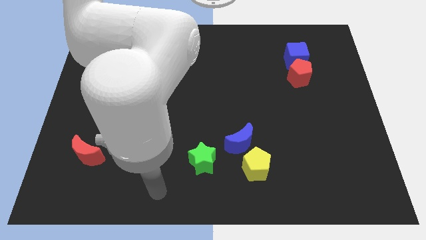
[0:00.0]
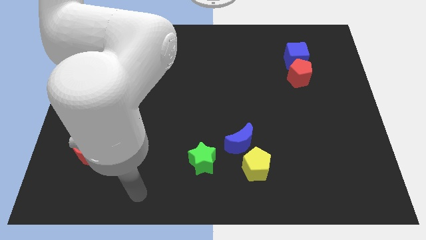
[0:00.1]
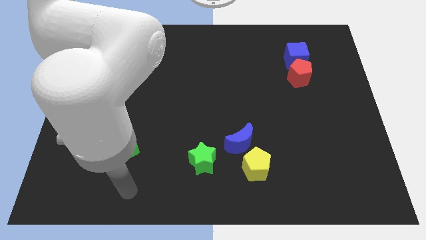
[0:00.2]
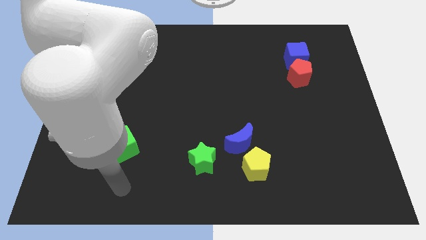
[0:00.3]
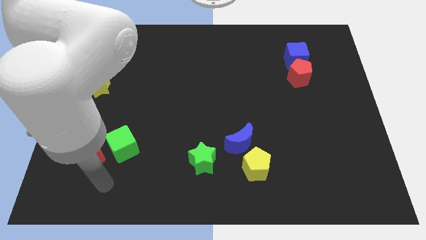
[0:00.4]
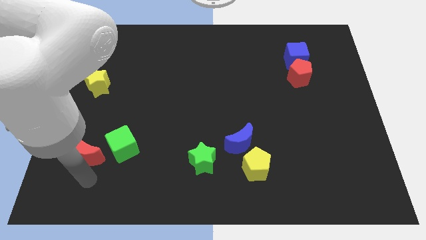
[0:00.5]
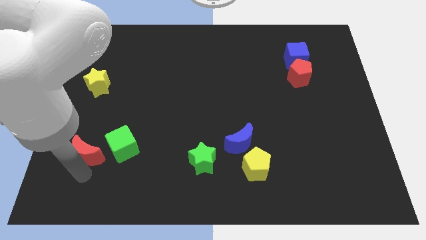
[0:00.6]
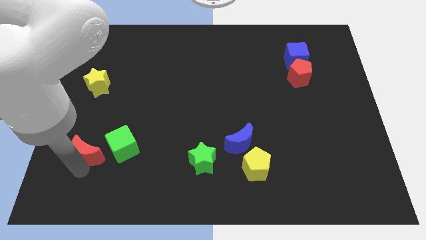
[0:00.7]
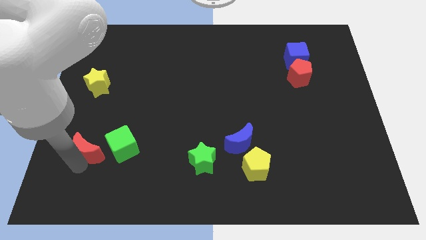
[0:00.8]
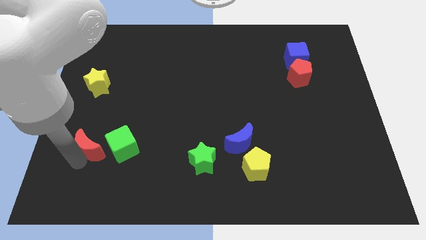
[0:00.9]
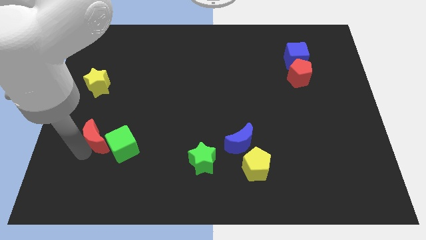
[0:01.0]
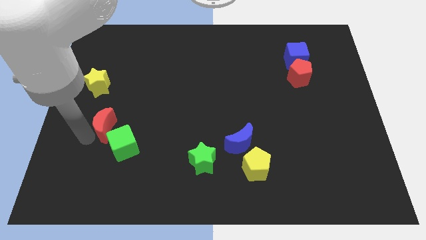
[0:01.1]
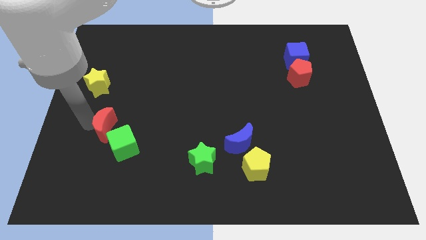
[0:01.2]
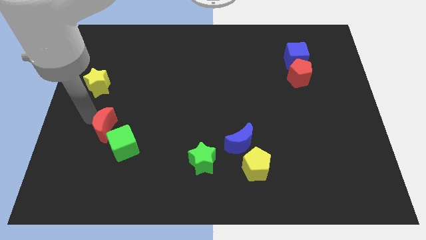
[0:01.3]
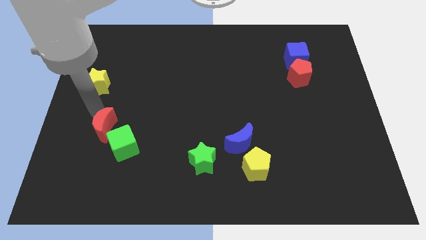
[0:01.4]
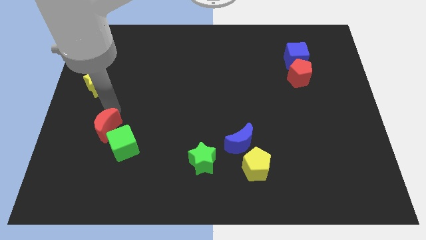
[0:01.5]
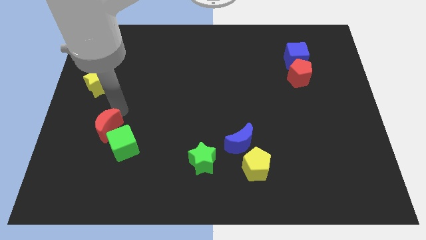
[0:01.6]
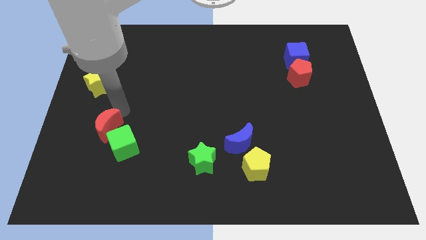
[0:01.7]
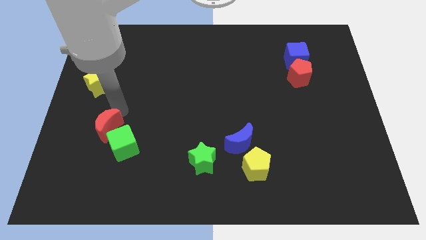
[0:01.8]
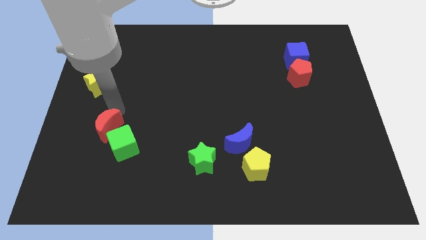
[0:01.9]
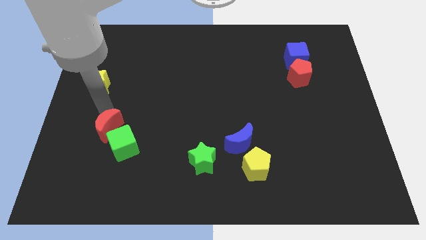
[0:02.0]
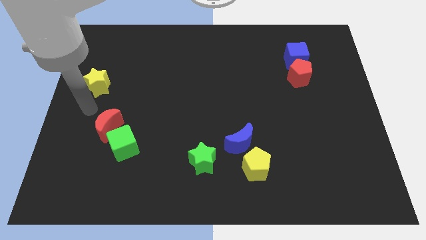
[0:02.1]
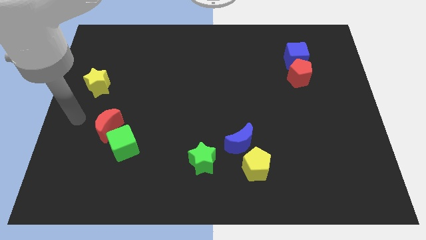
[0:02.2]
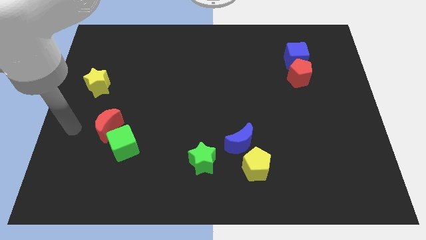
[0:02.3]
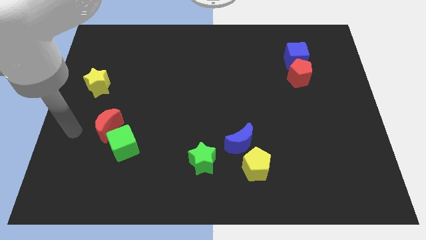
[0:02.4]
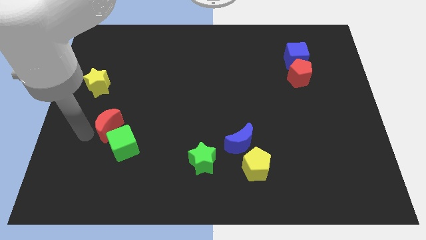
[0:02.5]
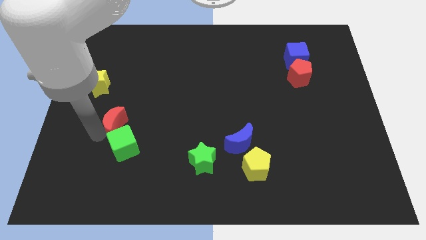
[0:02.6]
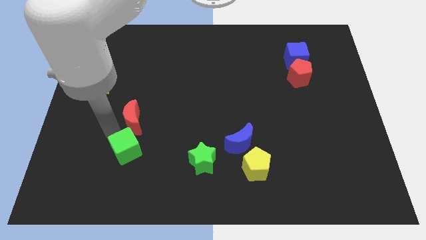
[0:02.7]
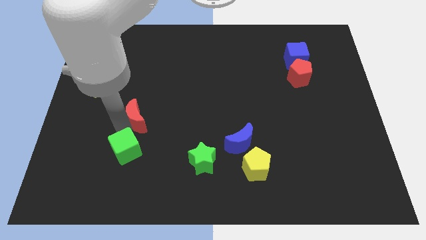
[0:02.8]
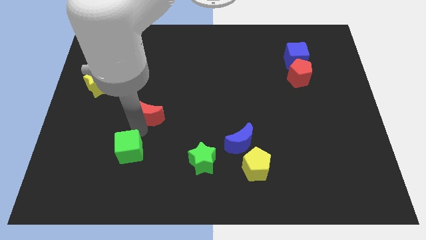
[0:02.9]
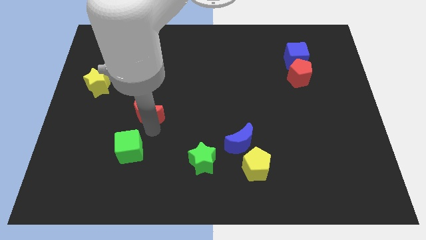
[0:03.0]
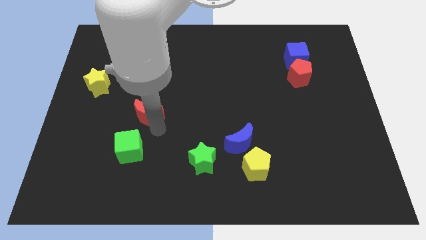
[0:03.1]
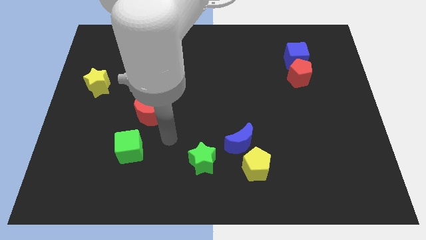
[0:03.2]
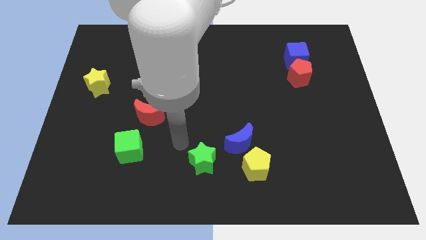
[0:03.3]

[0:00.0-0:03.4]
push the red moon to the top right of the green cube

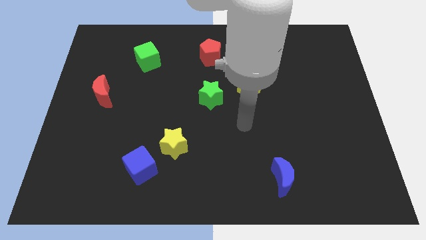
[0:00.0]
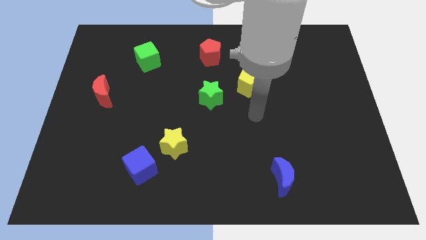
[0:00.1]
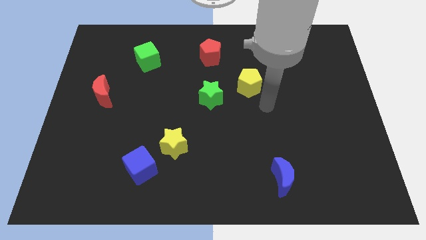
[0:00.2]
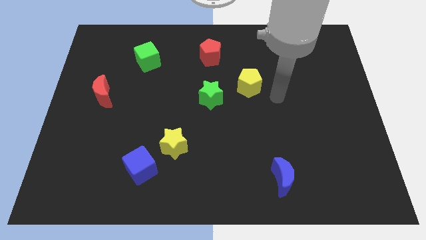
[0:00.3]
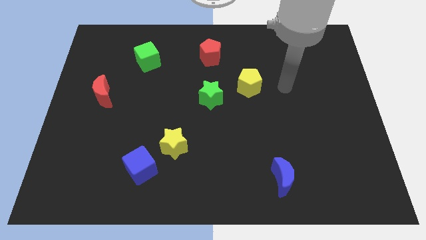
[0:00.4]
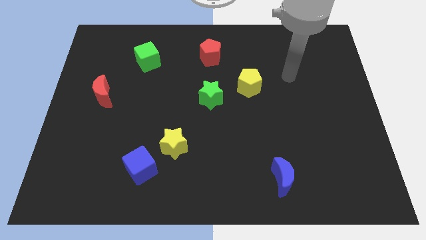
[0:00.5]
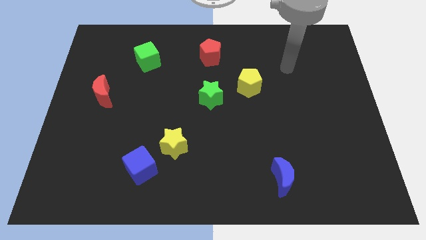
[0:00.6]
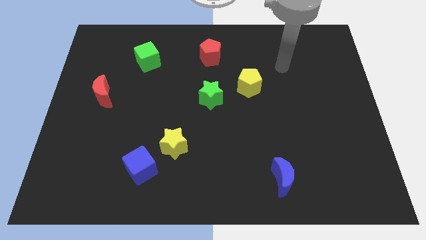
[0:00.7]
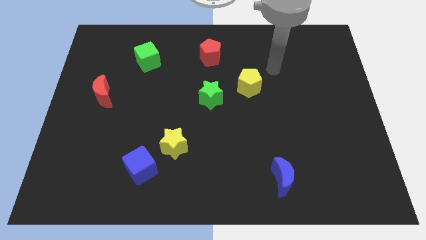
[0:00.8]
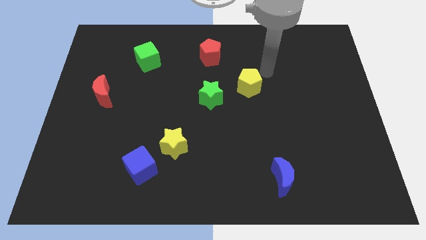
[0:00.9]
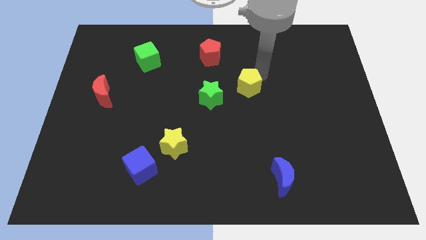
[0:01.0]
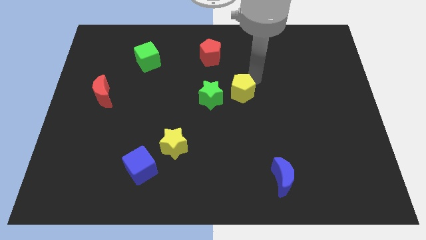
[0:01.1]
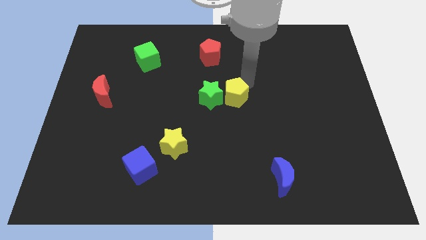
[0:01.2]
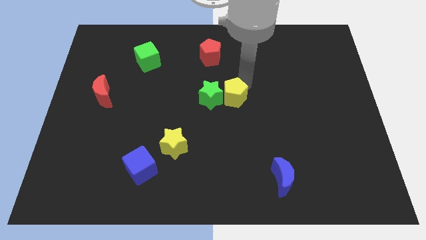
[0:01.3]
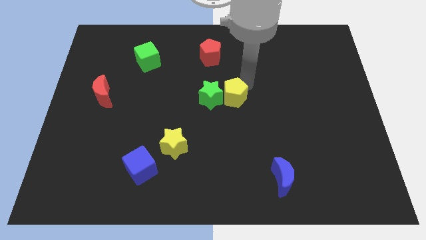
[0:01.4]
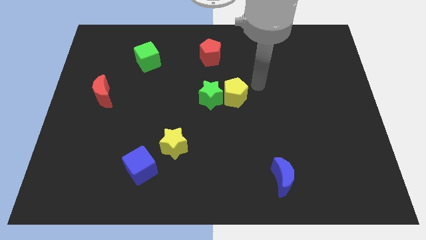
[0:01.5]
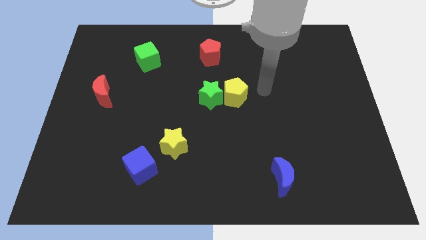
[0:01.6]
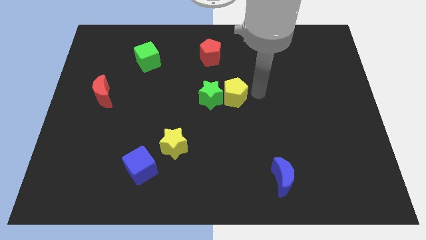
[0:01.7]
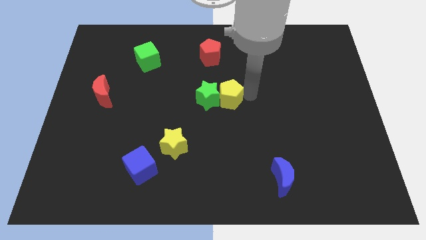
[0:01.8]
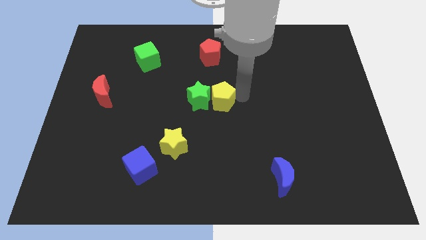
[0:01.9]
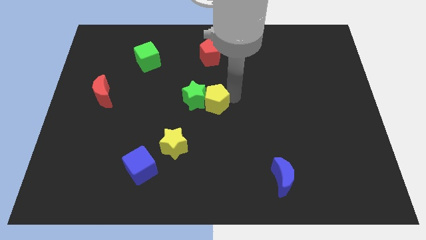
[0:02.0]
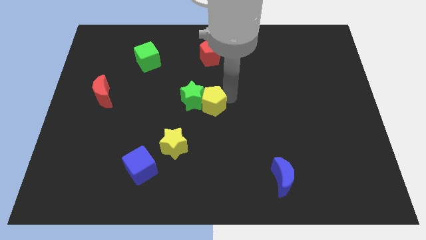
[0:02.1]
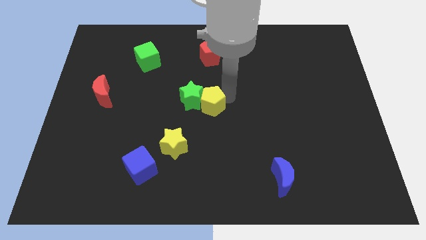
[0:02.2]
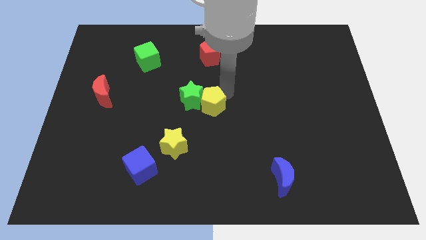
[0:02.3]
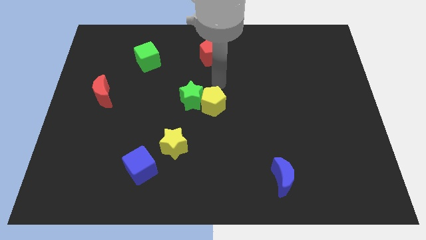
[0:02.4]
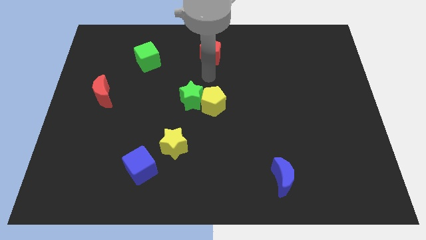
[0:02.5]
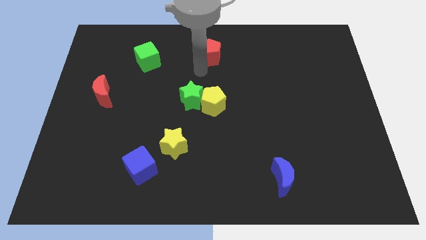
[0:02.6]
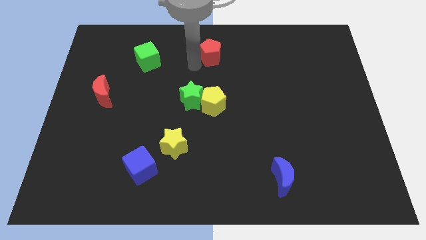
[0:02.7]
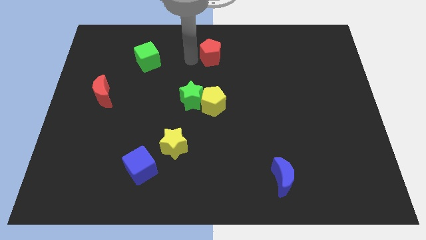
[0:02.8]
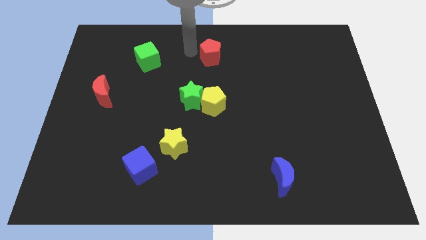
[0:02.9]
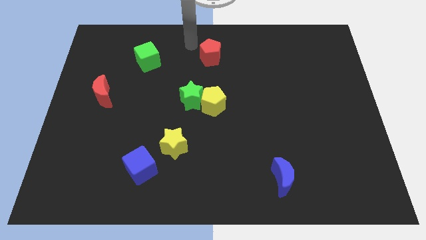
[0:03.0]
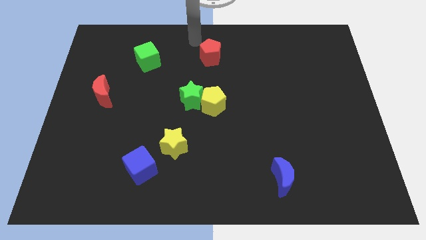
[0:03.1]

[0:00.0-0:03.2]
push the green star with the yellow pentagon towards the center of the board

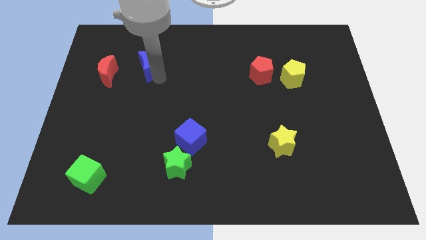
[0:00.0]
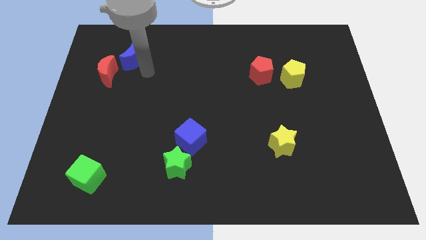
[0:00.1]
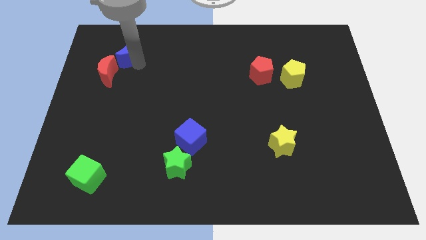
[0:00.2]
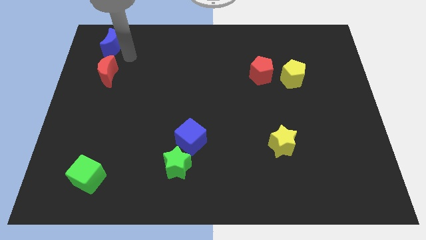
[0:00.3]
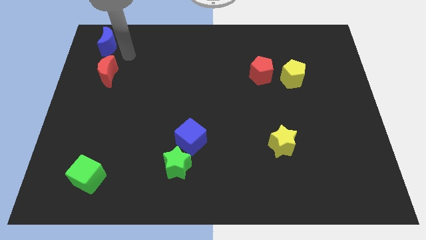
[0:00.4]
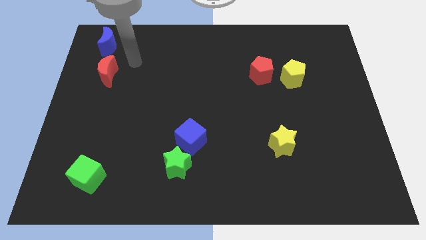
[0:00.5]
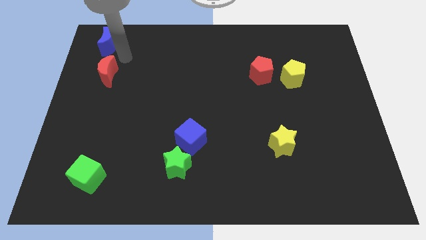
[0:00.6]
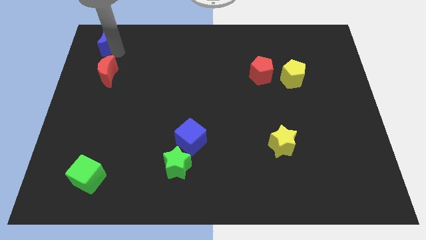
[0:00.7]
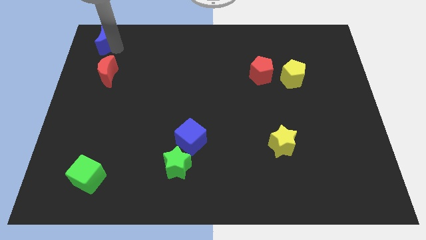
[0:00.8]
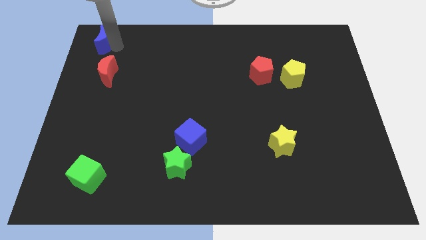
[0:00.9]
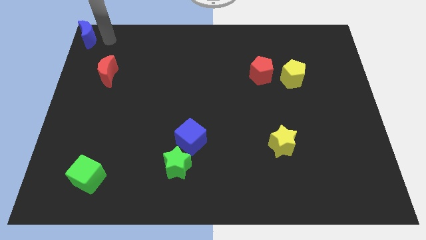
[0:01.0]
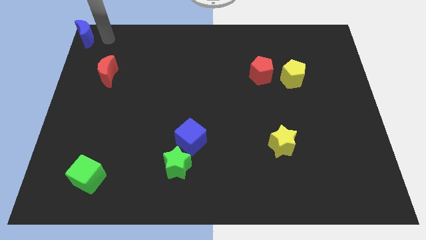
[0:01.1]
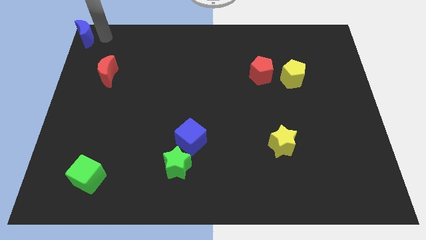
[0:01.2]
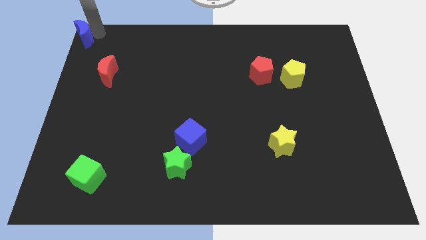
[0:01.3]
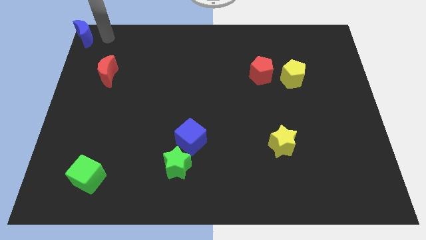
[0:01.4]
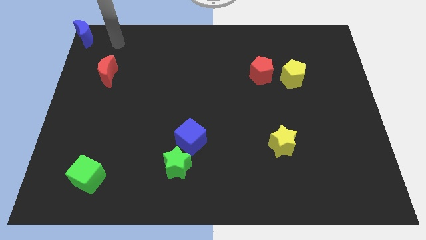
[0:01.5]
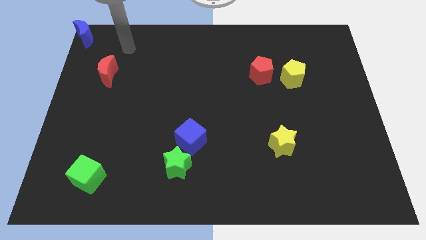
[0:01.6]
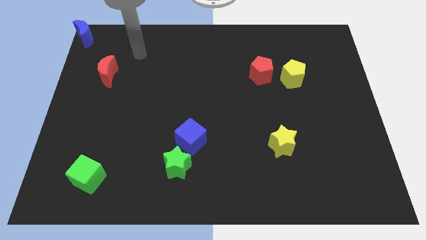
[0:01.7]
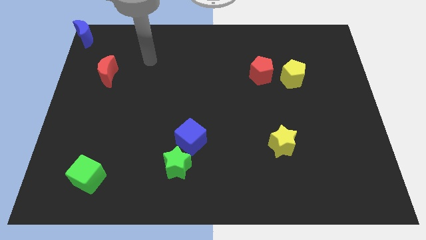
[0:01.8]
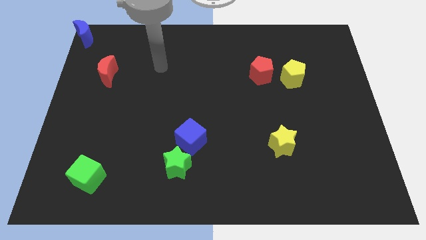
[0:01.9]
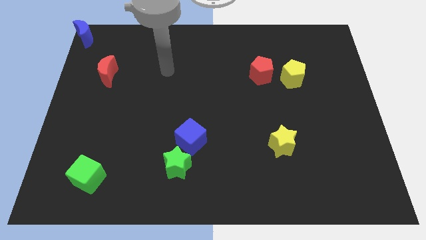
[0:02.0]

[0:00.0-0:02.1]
place the blue moon to the top left corner

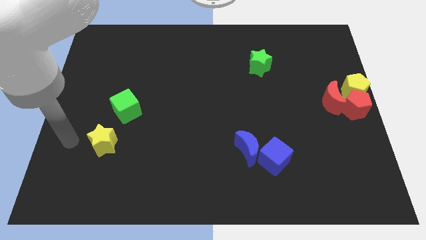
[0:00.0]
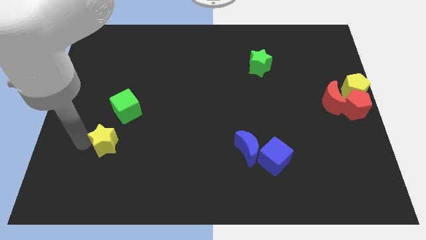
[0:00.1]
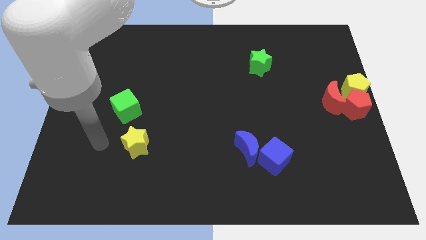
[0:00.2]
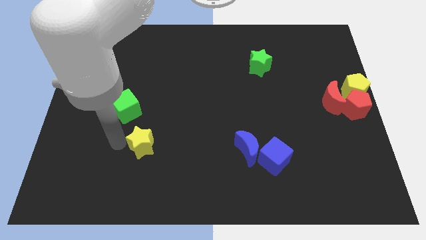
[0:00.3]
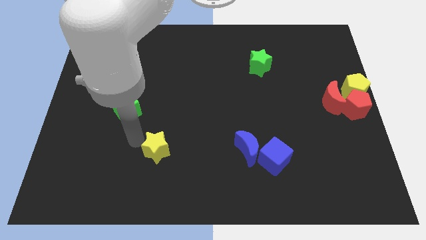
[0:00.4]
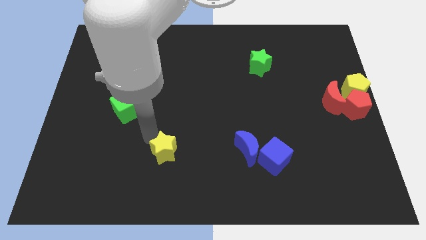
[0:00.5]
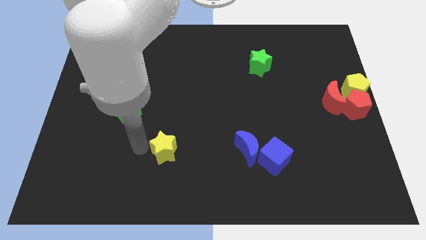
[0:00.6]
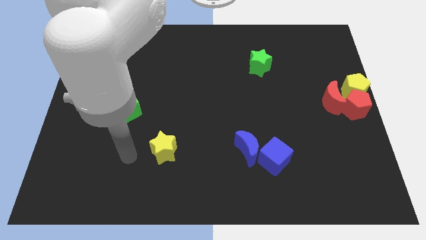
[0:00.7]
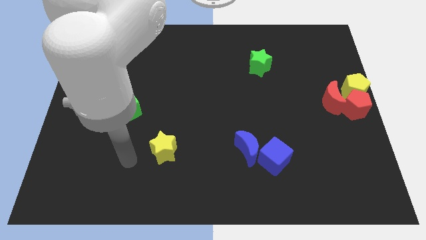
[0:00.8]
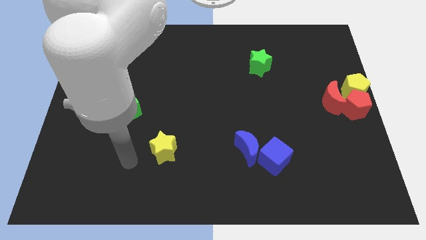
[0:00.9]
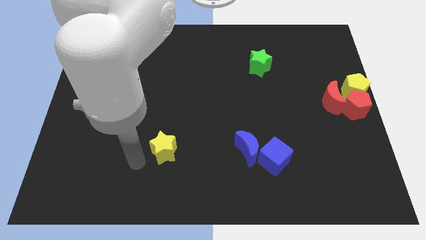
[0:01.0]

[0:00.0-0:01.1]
push the yellow star towards right
